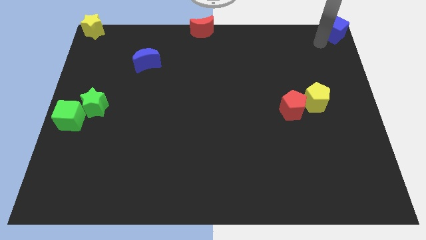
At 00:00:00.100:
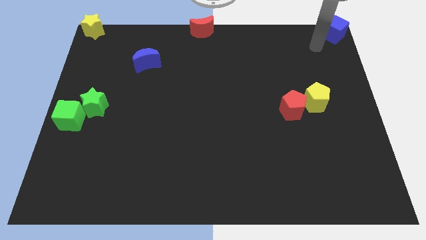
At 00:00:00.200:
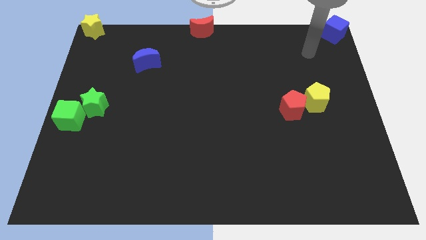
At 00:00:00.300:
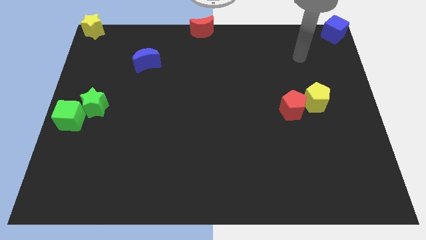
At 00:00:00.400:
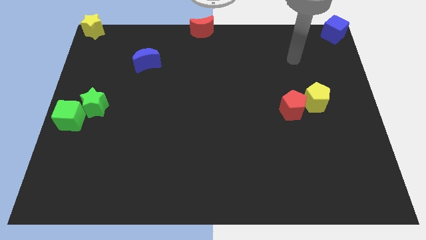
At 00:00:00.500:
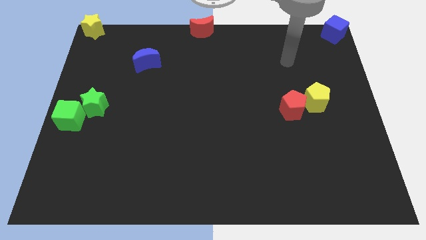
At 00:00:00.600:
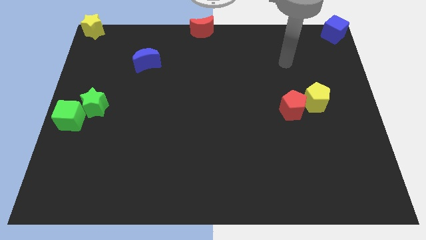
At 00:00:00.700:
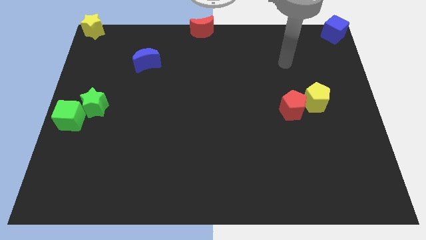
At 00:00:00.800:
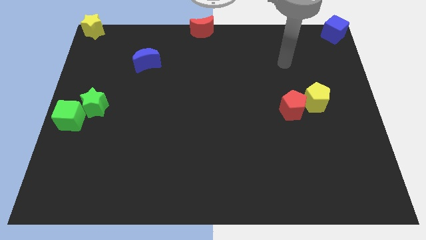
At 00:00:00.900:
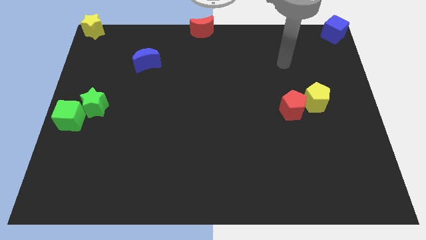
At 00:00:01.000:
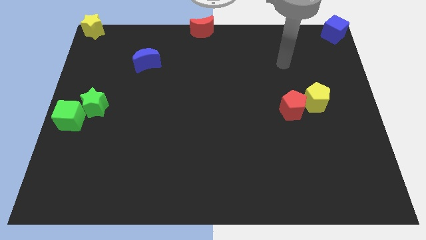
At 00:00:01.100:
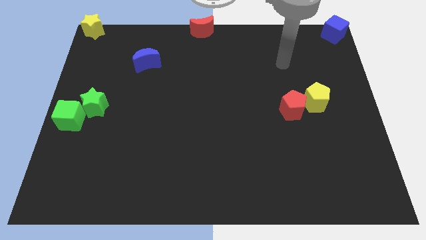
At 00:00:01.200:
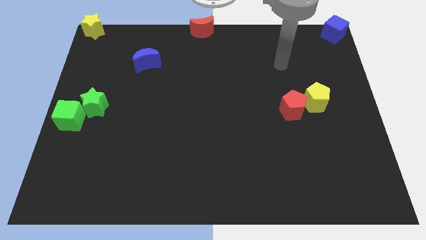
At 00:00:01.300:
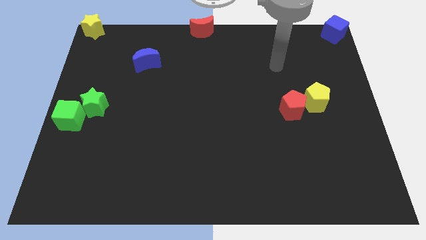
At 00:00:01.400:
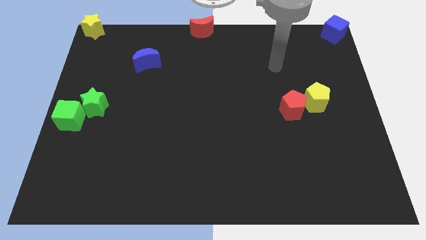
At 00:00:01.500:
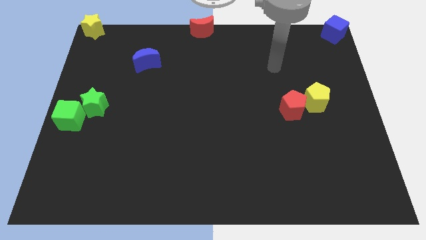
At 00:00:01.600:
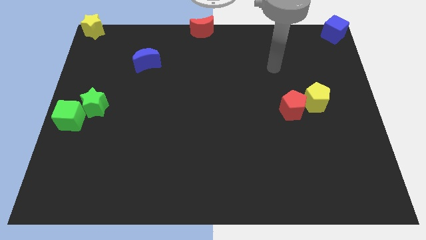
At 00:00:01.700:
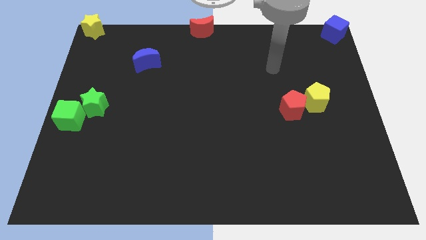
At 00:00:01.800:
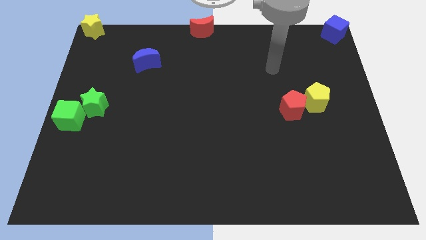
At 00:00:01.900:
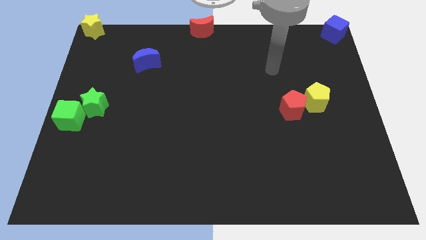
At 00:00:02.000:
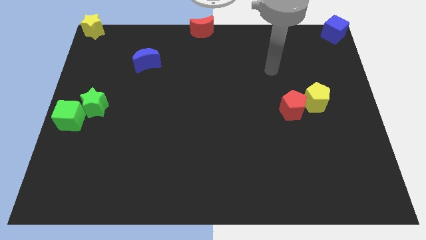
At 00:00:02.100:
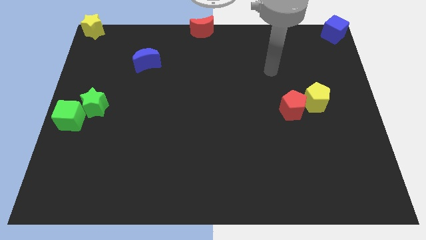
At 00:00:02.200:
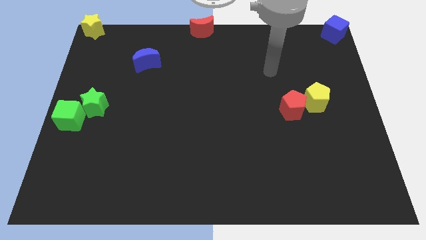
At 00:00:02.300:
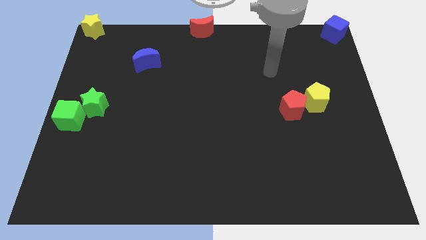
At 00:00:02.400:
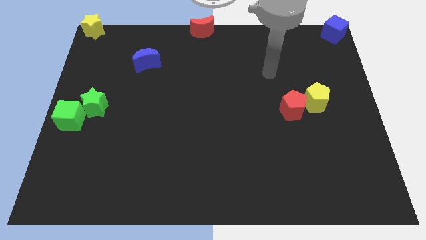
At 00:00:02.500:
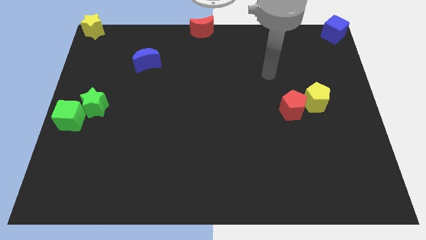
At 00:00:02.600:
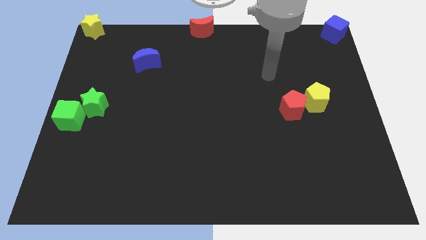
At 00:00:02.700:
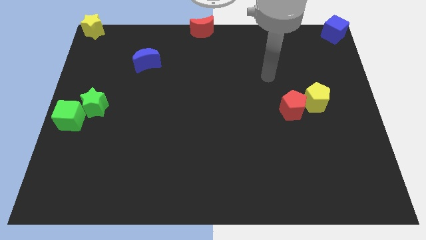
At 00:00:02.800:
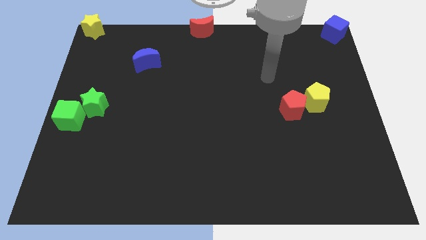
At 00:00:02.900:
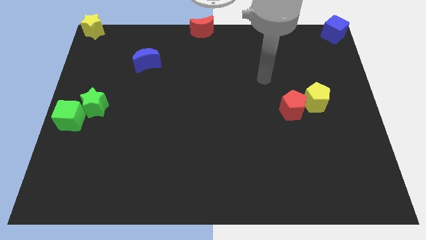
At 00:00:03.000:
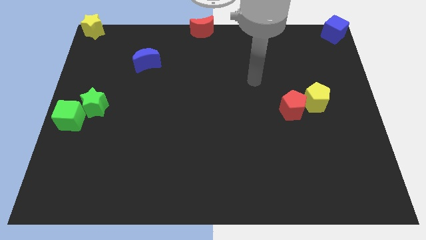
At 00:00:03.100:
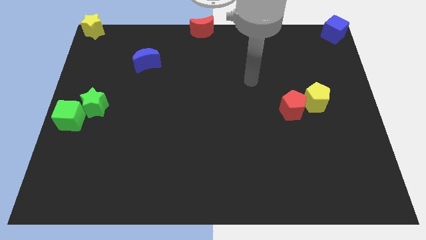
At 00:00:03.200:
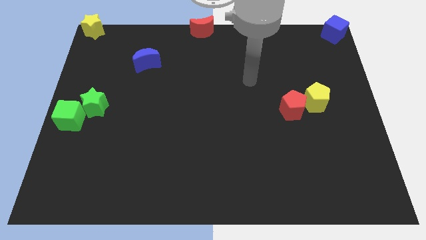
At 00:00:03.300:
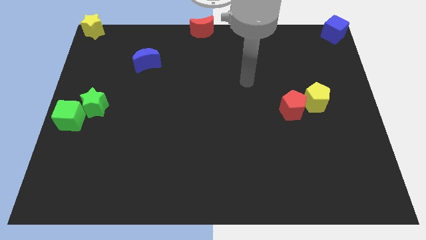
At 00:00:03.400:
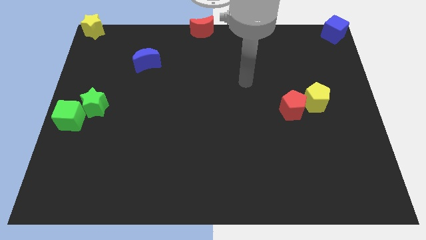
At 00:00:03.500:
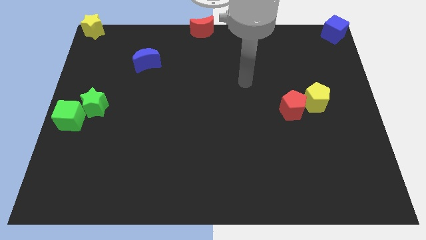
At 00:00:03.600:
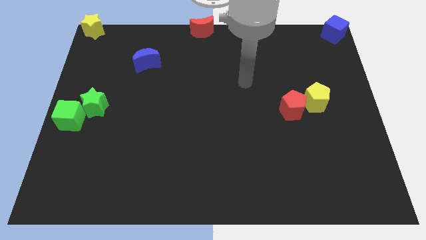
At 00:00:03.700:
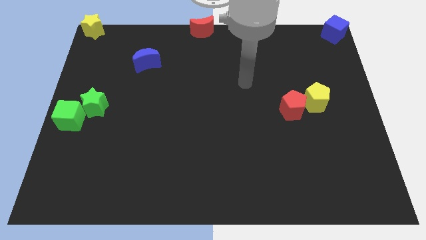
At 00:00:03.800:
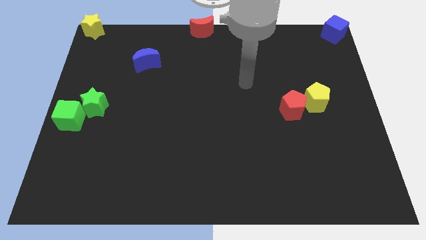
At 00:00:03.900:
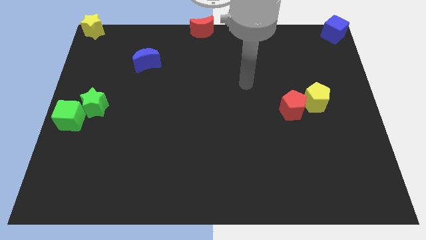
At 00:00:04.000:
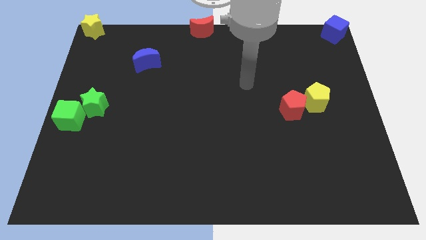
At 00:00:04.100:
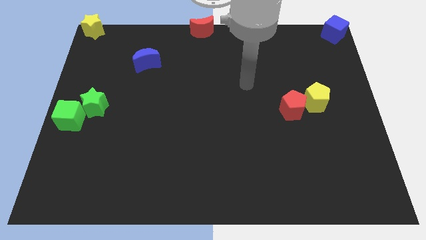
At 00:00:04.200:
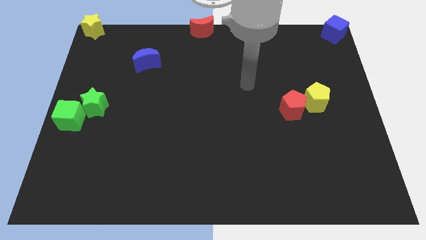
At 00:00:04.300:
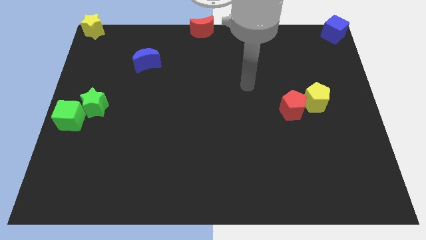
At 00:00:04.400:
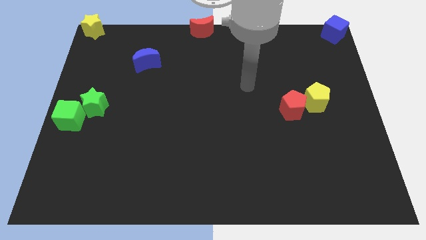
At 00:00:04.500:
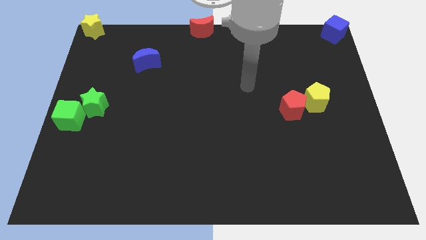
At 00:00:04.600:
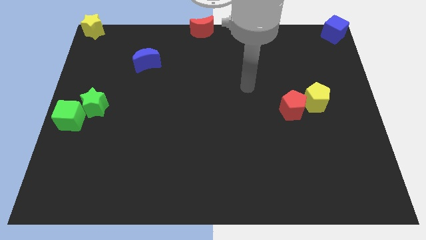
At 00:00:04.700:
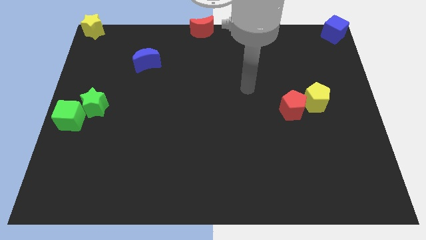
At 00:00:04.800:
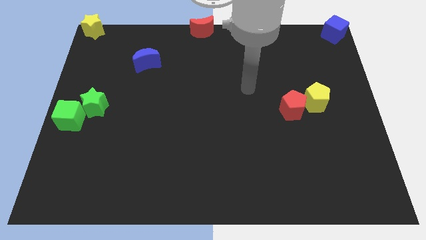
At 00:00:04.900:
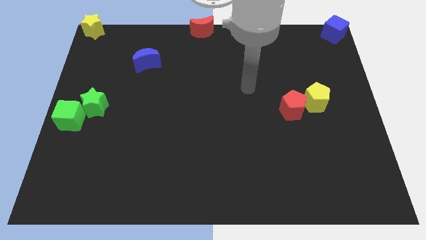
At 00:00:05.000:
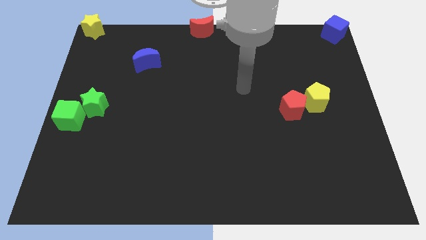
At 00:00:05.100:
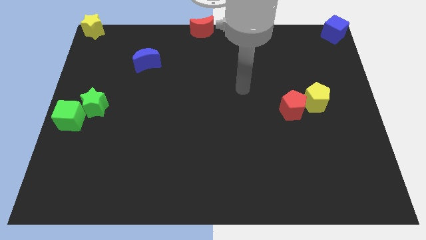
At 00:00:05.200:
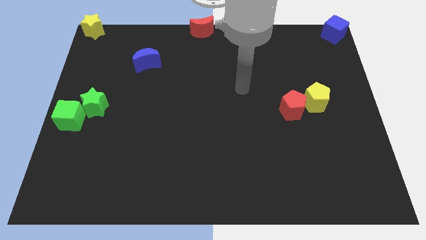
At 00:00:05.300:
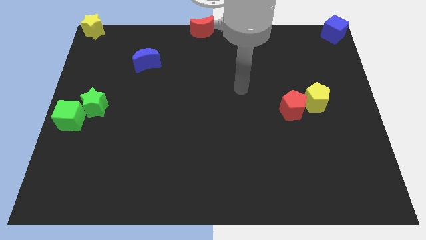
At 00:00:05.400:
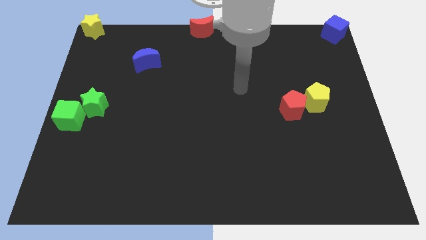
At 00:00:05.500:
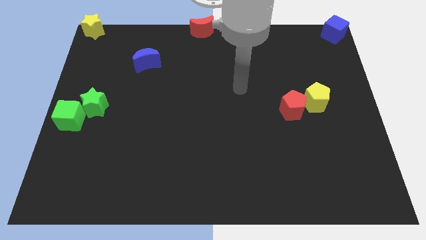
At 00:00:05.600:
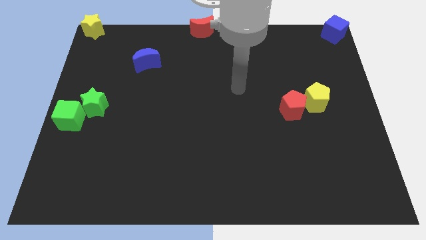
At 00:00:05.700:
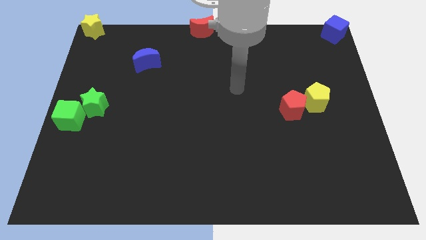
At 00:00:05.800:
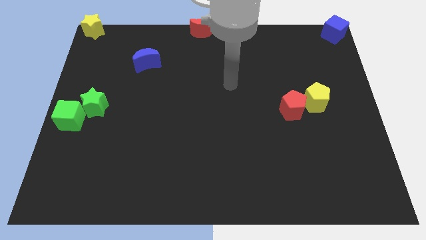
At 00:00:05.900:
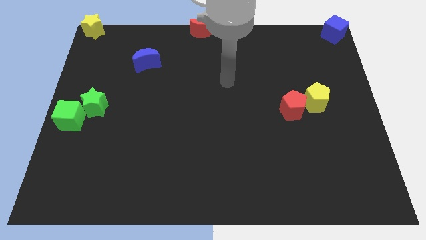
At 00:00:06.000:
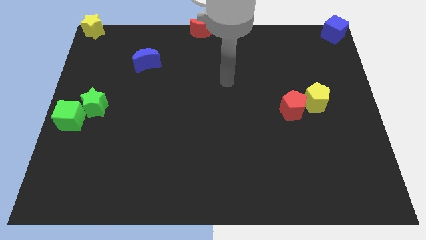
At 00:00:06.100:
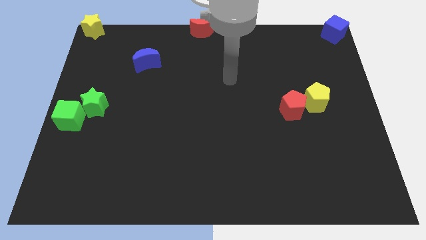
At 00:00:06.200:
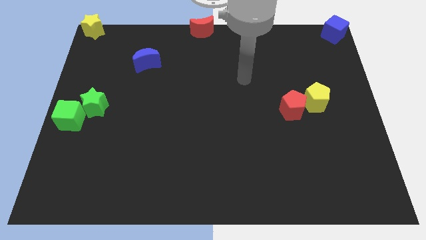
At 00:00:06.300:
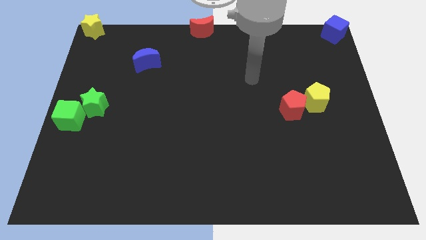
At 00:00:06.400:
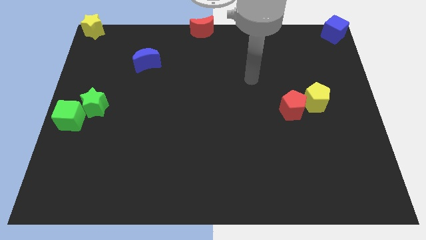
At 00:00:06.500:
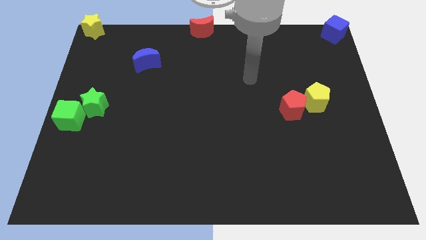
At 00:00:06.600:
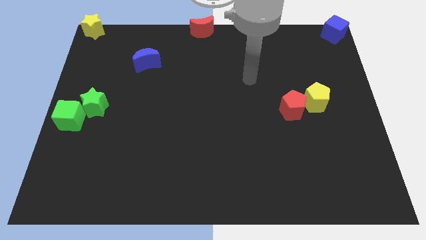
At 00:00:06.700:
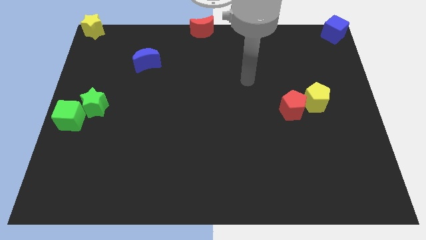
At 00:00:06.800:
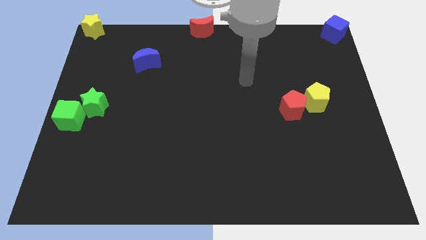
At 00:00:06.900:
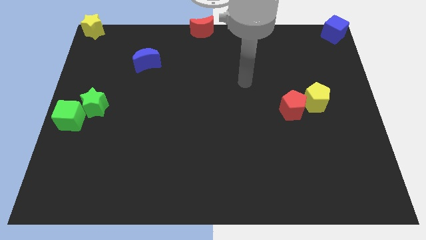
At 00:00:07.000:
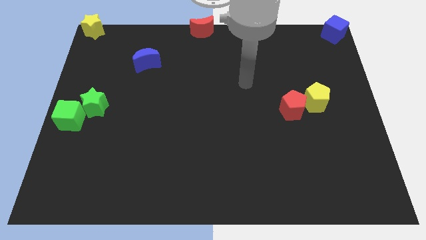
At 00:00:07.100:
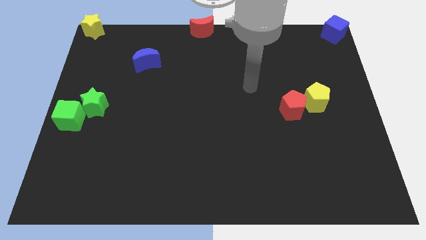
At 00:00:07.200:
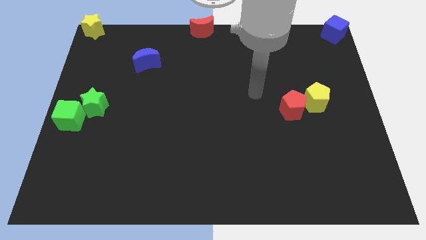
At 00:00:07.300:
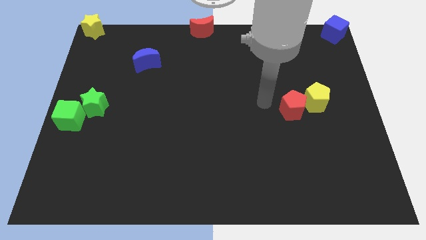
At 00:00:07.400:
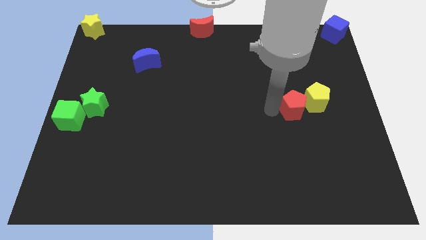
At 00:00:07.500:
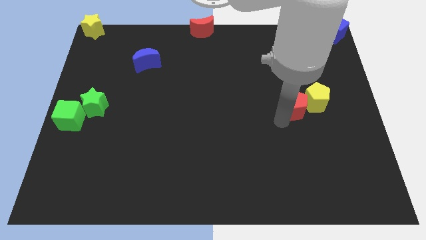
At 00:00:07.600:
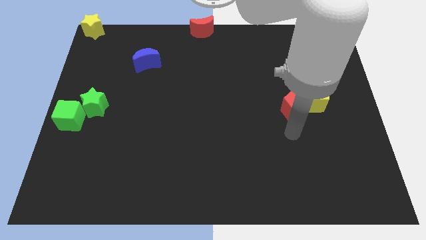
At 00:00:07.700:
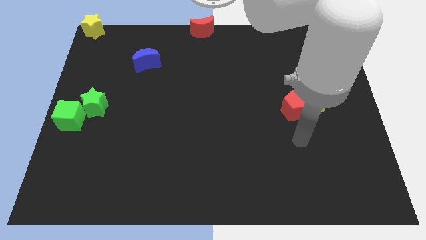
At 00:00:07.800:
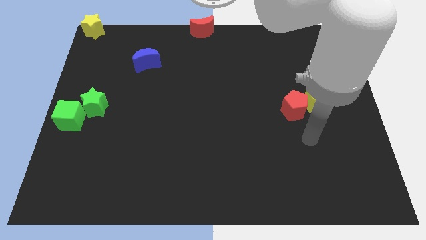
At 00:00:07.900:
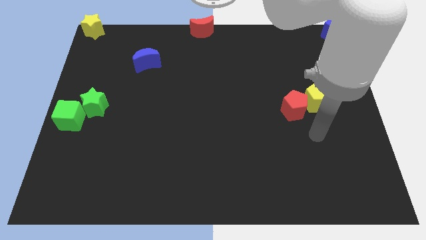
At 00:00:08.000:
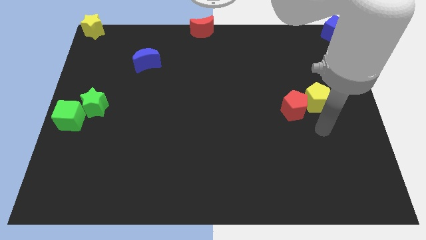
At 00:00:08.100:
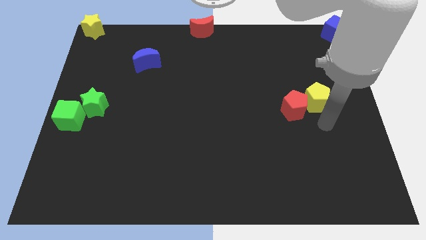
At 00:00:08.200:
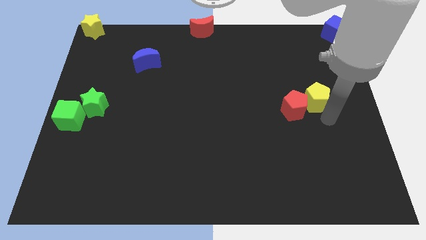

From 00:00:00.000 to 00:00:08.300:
place the arm below the yellow pentagon

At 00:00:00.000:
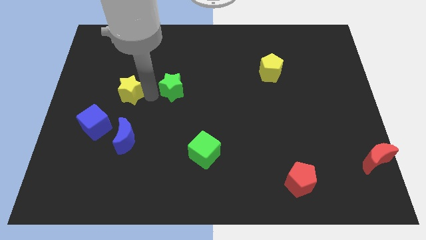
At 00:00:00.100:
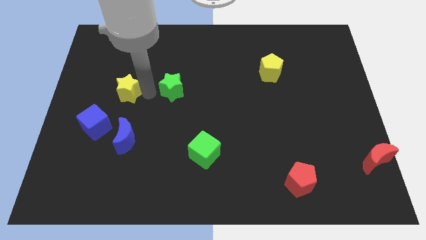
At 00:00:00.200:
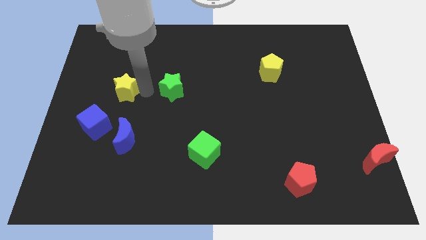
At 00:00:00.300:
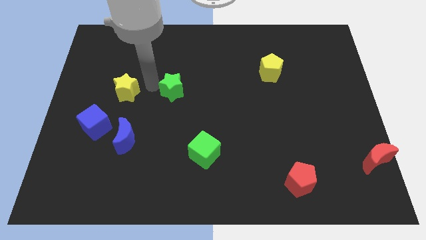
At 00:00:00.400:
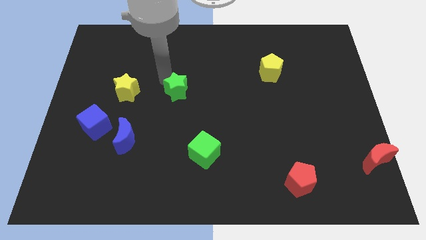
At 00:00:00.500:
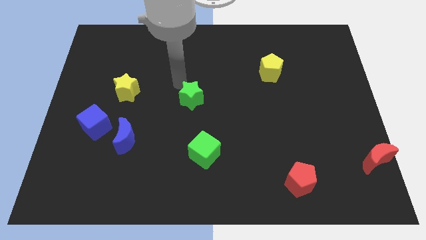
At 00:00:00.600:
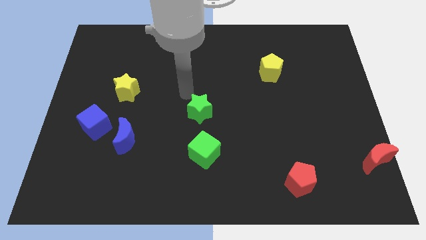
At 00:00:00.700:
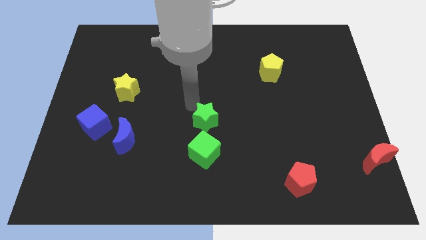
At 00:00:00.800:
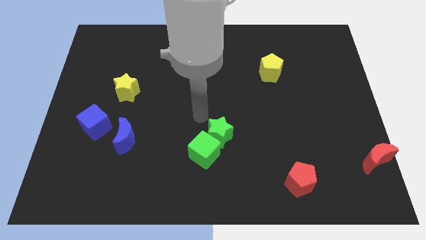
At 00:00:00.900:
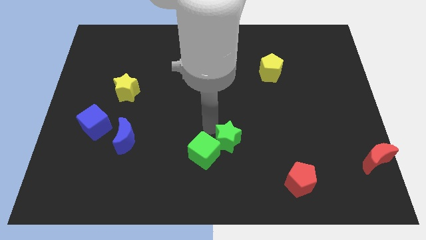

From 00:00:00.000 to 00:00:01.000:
place the green star above the green cube
